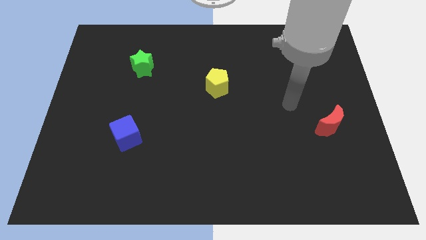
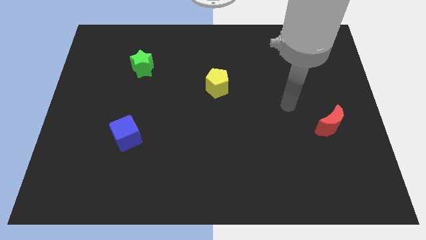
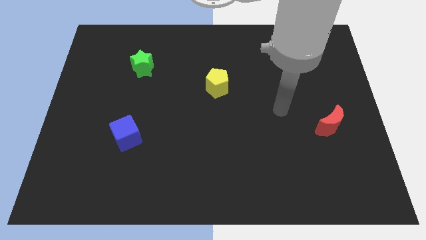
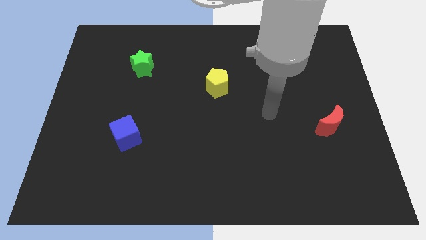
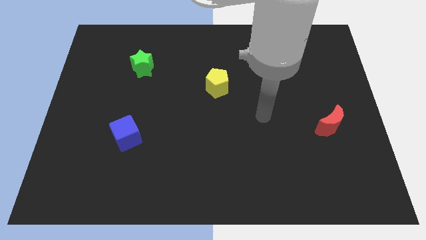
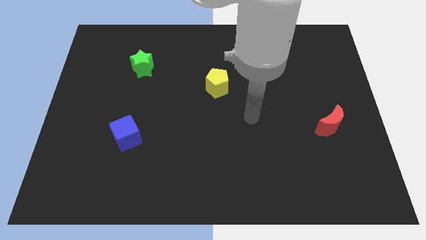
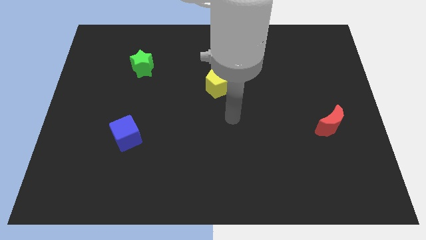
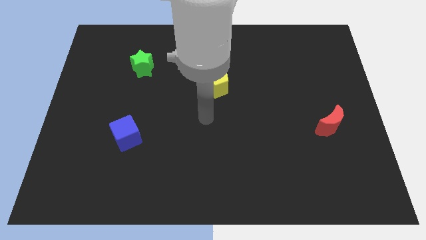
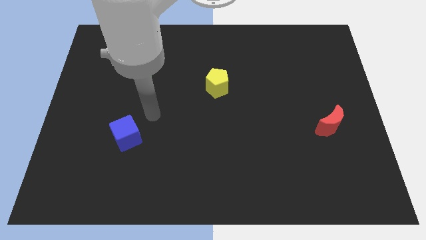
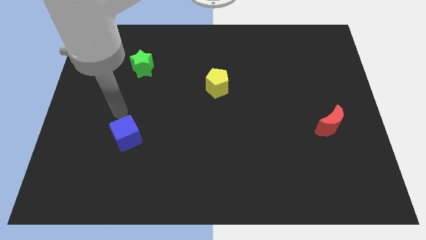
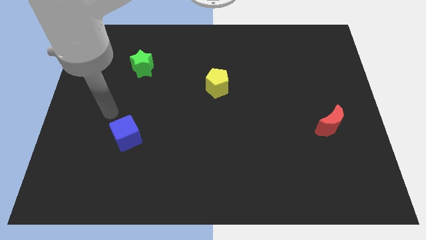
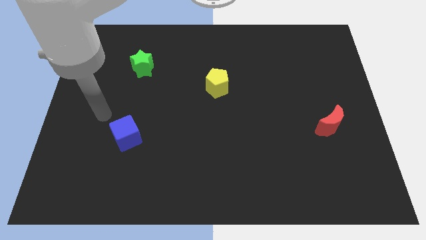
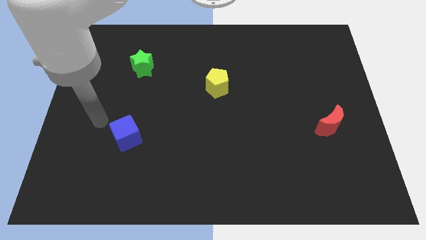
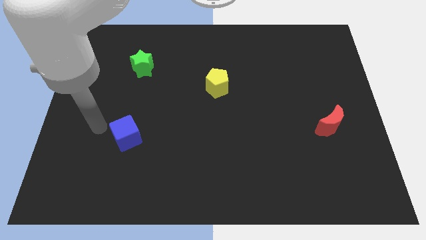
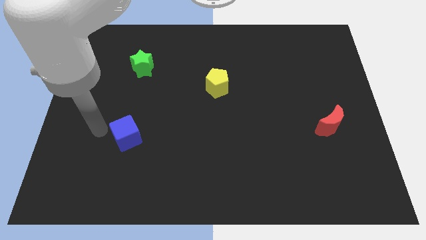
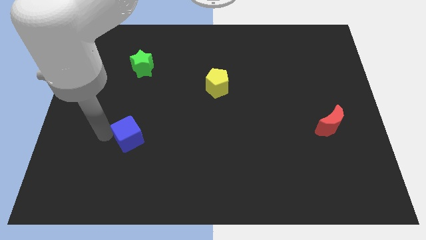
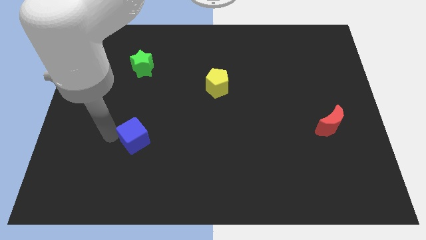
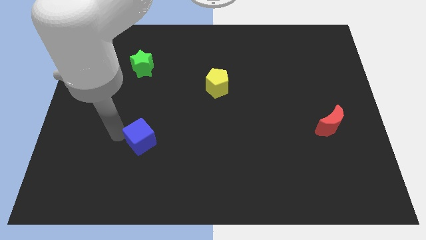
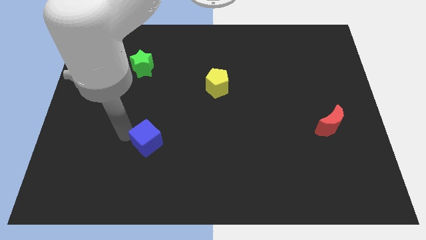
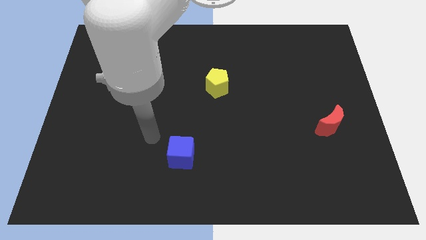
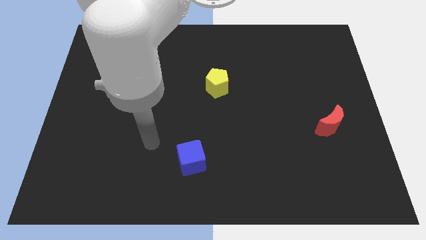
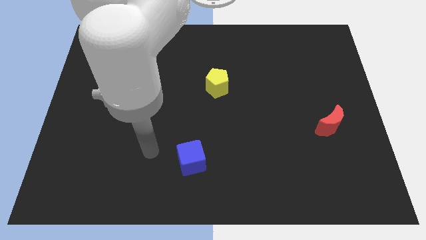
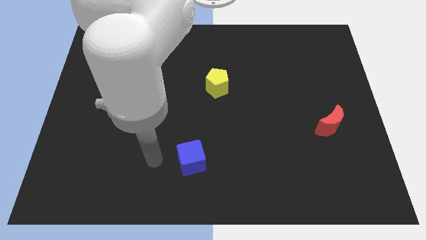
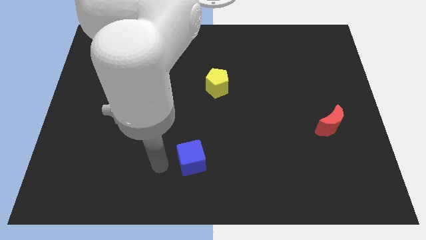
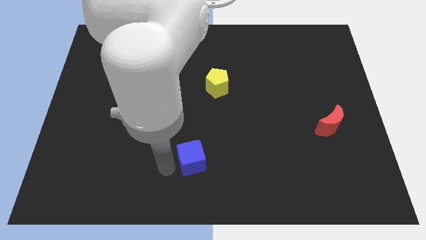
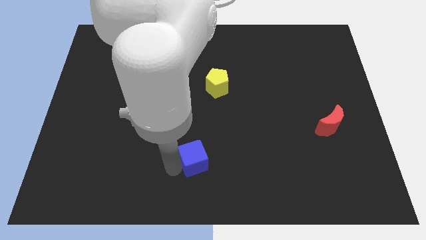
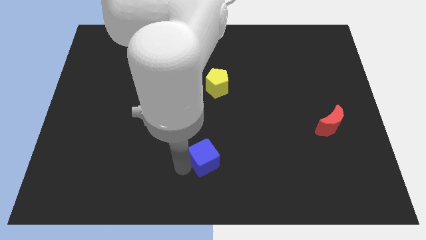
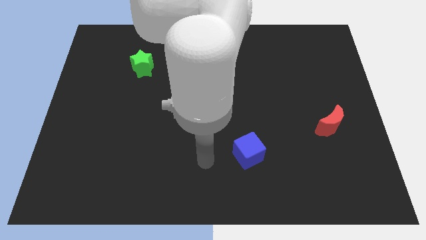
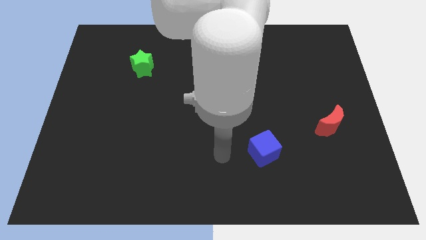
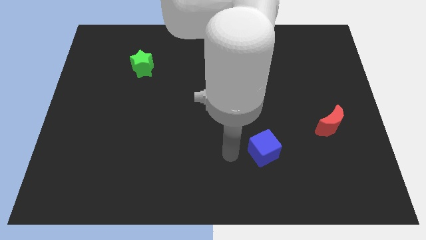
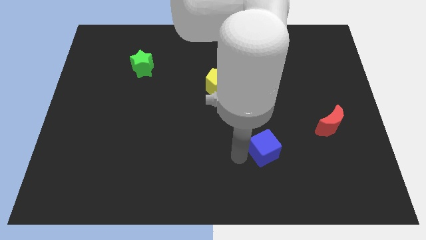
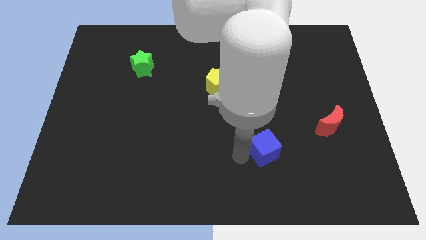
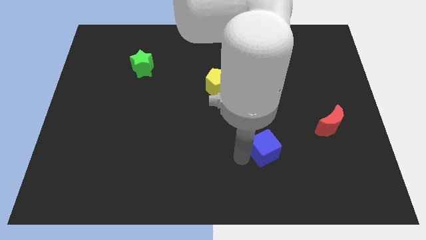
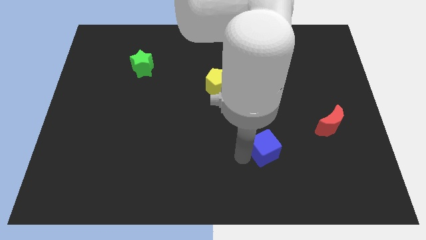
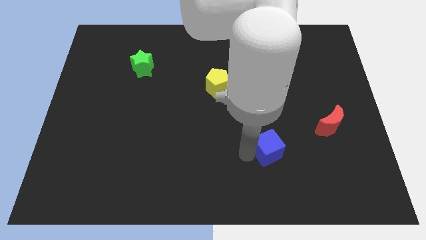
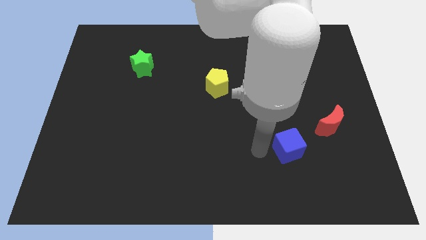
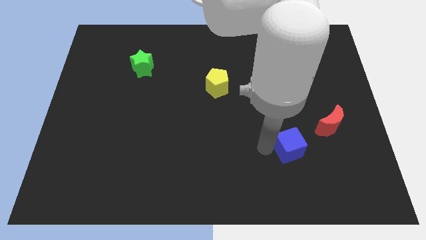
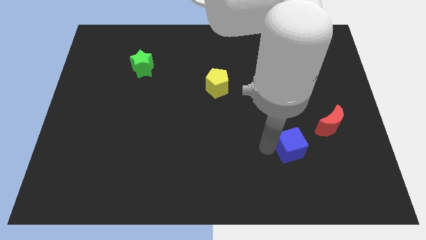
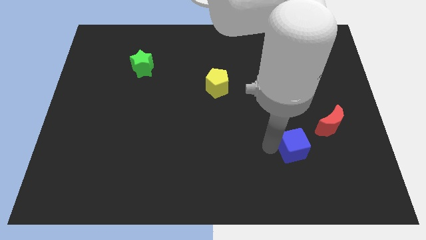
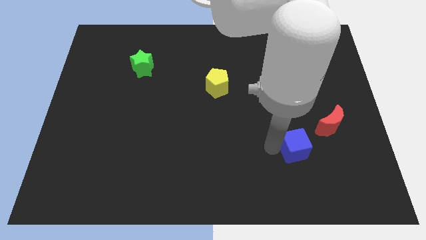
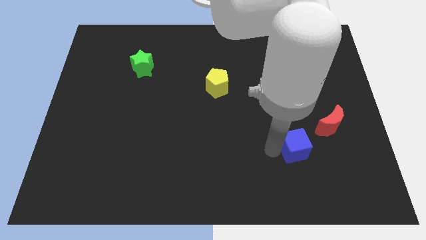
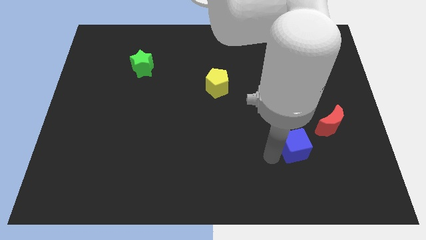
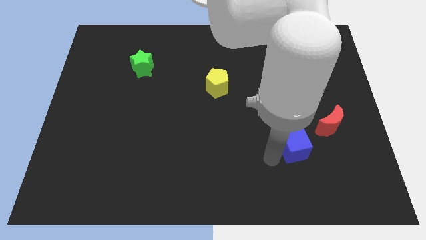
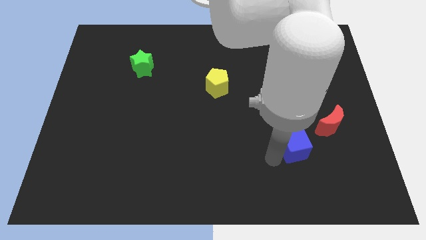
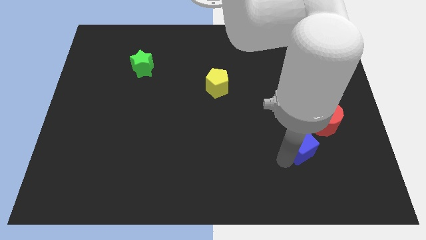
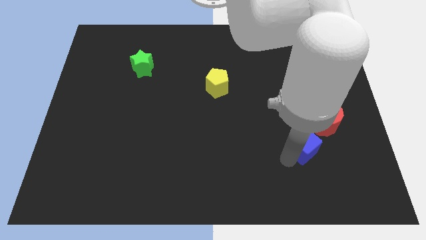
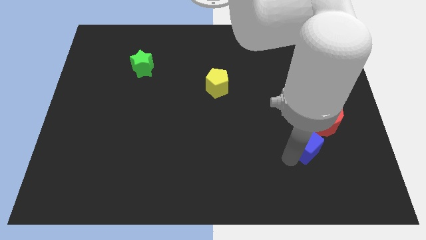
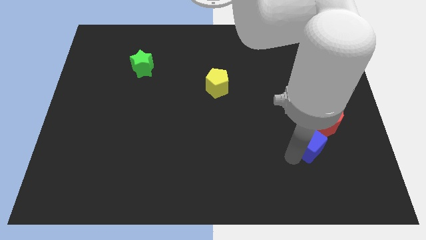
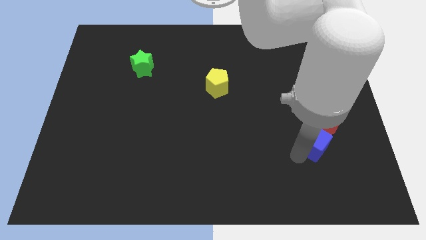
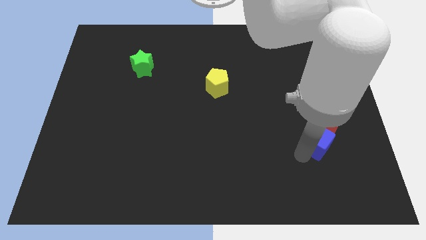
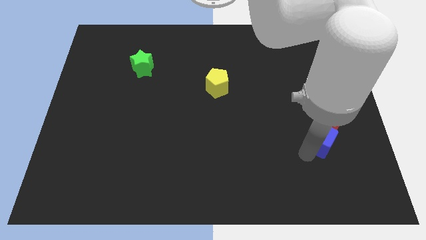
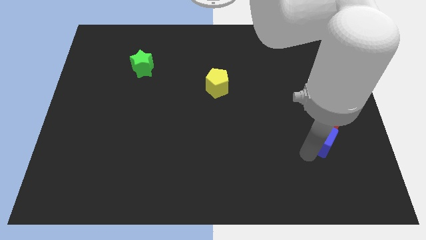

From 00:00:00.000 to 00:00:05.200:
push the cube close to the red block

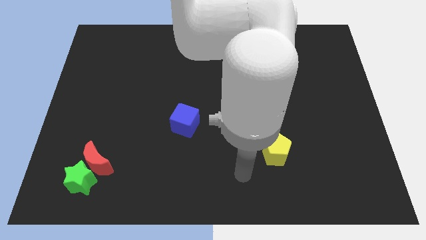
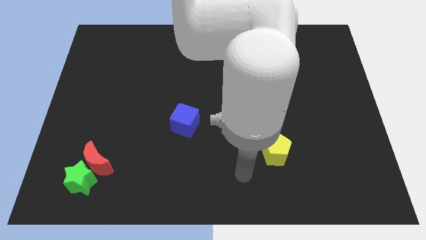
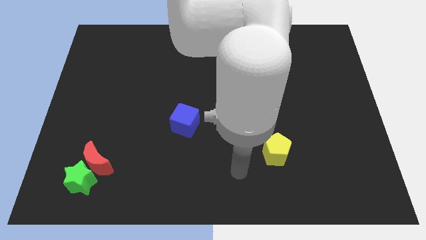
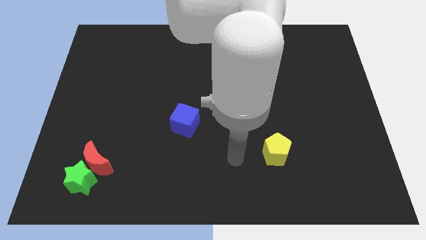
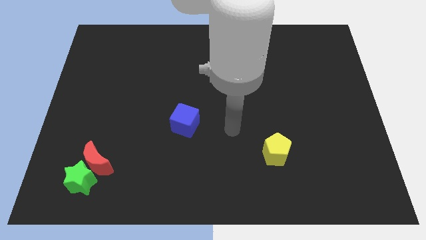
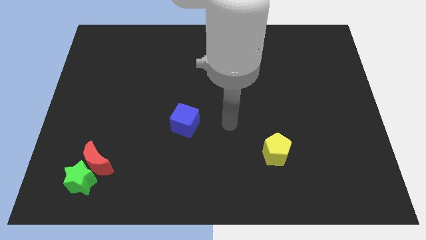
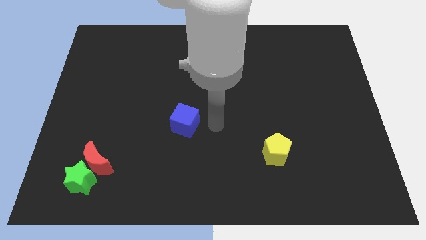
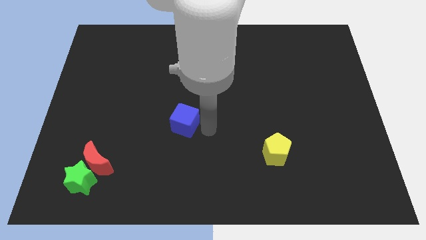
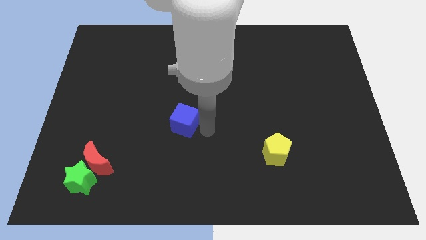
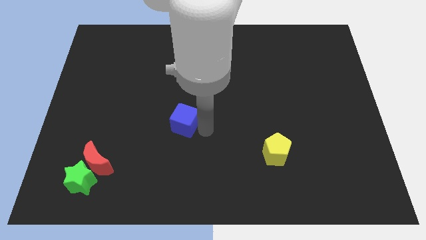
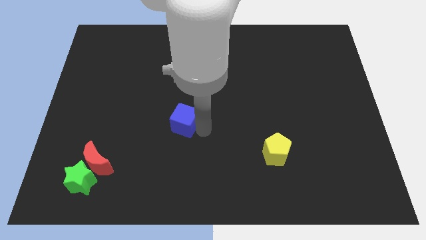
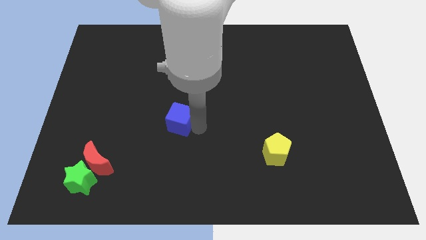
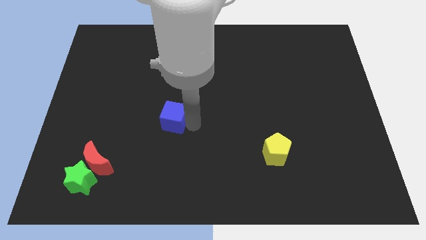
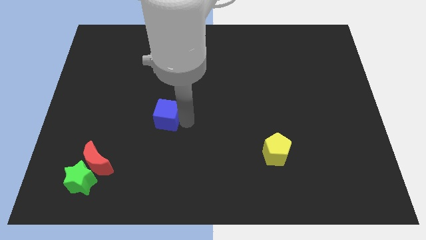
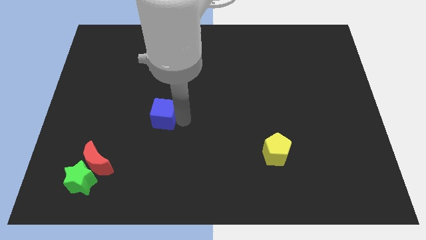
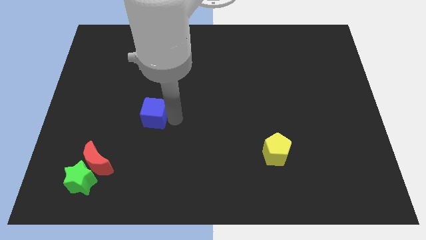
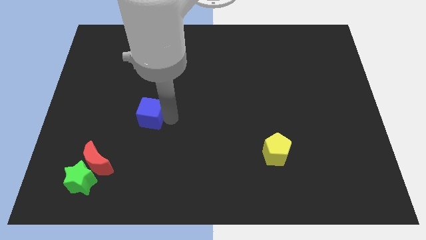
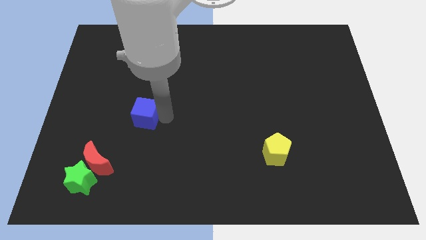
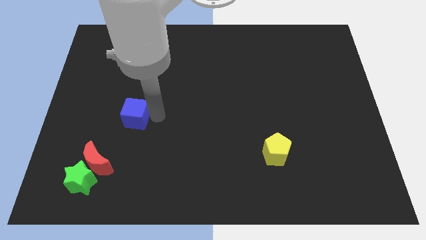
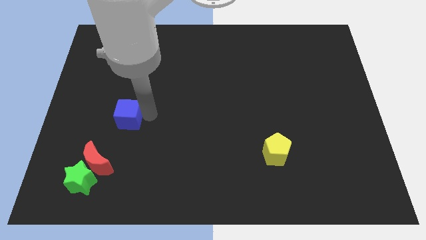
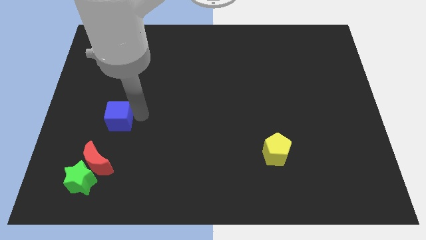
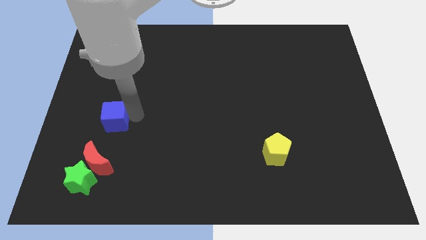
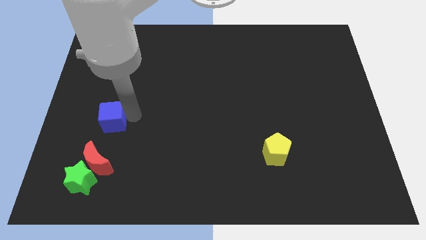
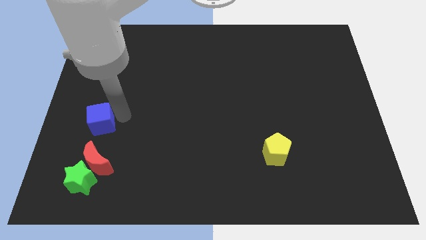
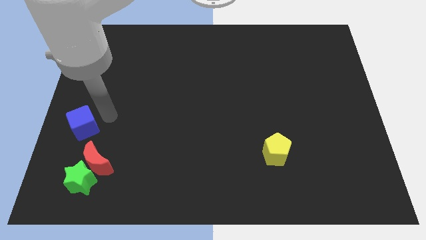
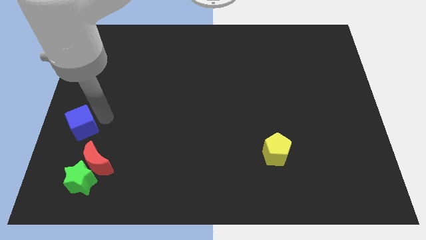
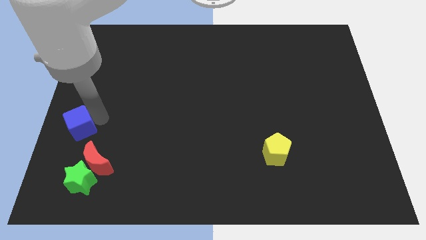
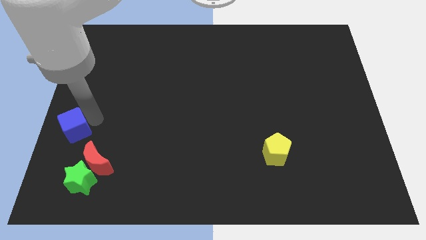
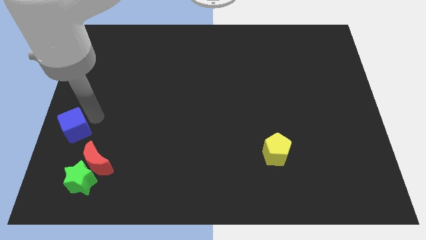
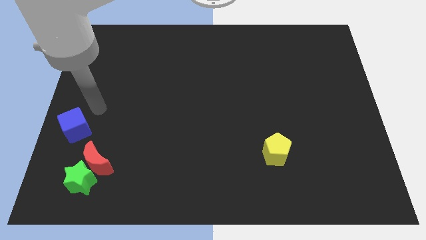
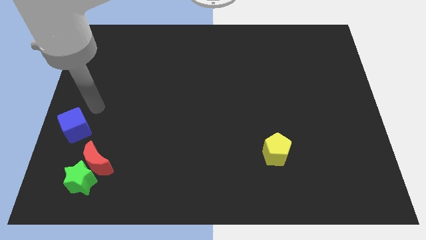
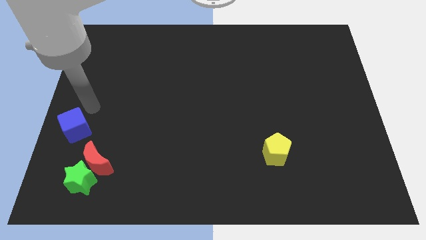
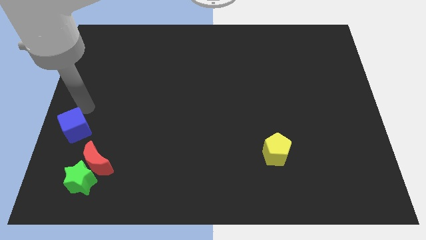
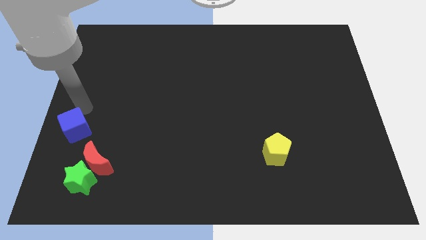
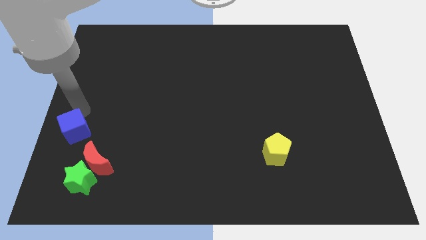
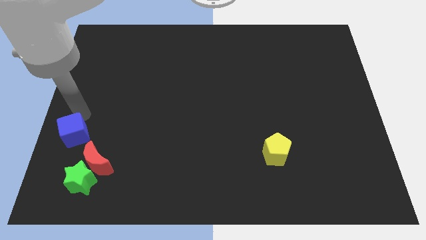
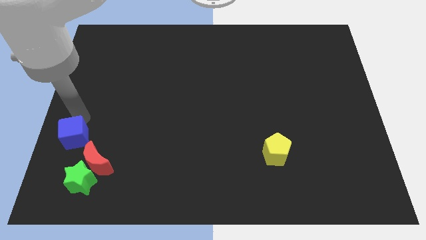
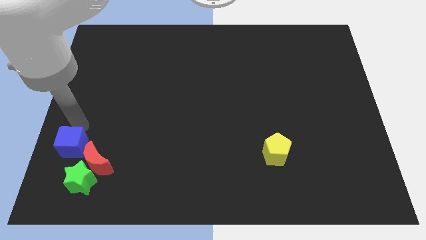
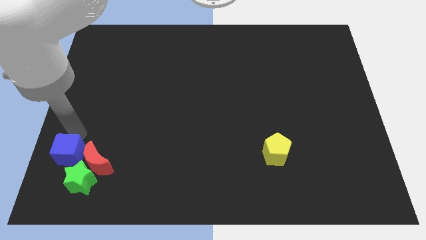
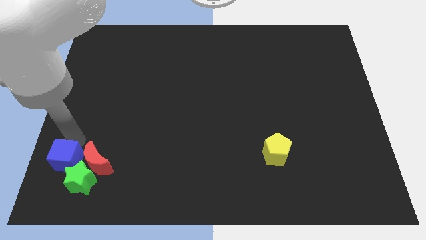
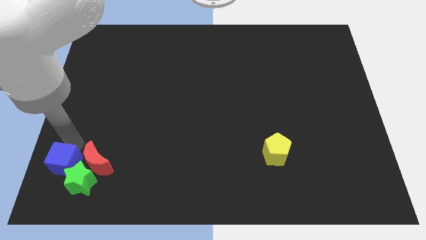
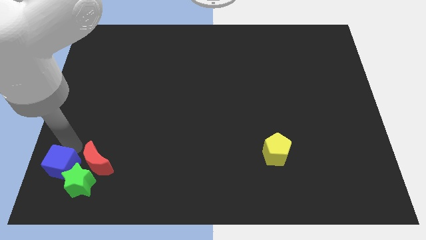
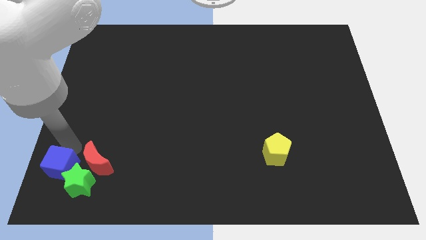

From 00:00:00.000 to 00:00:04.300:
put the cube towards the green block
